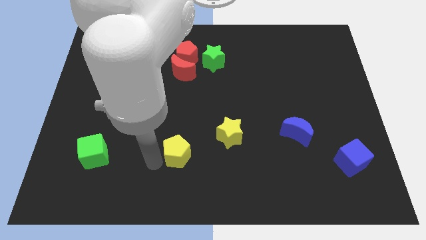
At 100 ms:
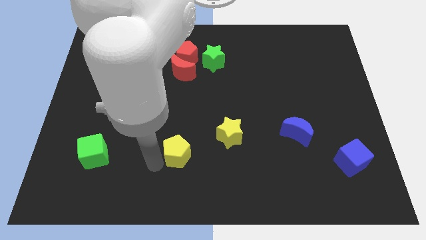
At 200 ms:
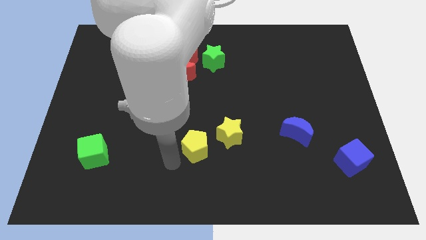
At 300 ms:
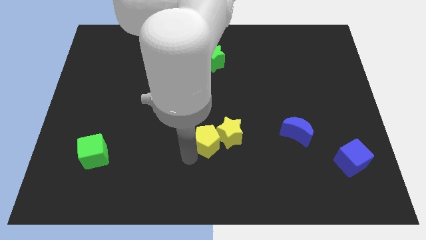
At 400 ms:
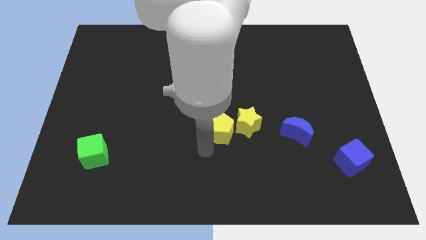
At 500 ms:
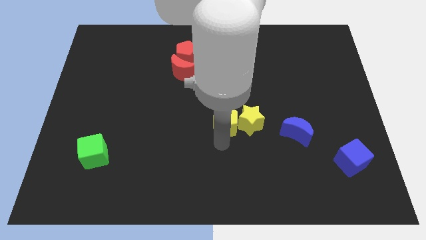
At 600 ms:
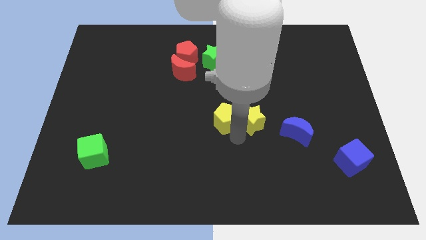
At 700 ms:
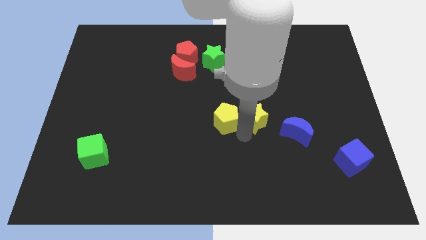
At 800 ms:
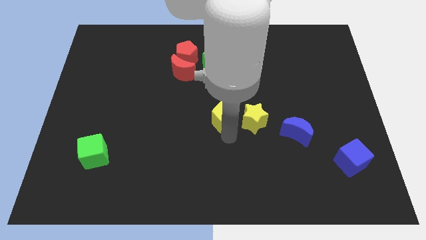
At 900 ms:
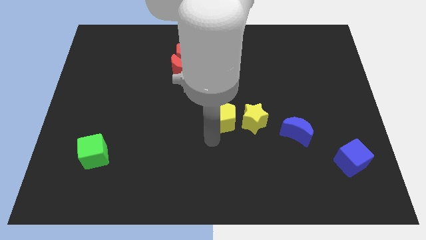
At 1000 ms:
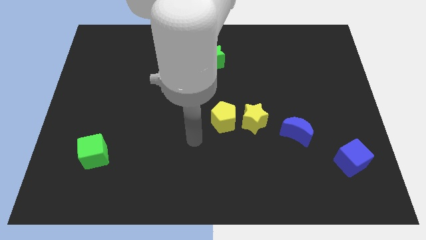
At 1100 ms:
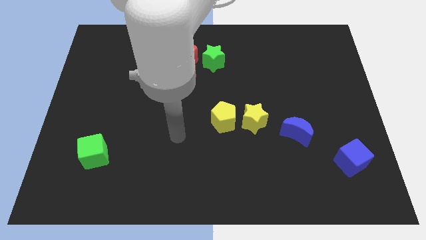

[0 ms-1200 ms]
put the yellow pentagon parallel left to the yellow star

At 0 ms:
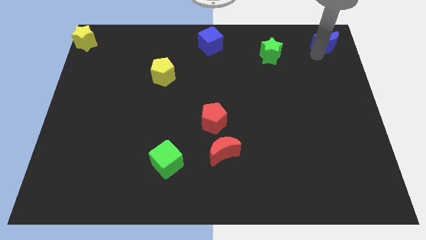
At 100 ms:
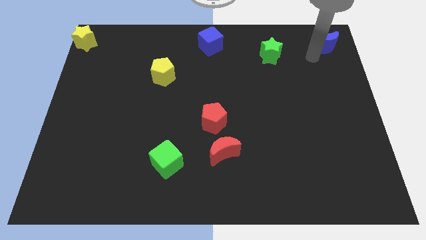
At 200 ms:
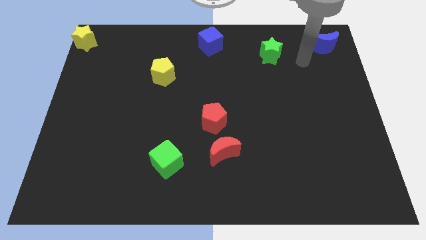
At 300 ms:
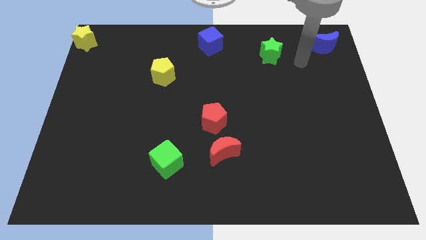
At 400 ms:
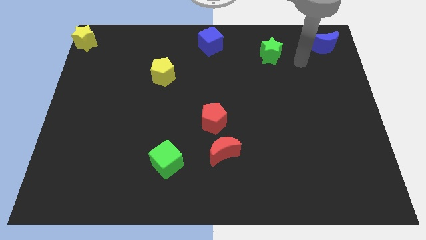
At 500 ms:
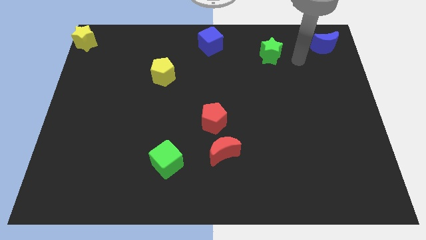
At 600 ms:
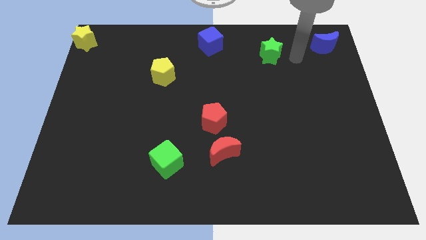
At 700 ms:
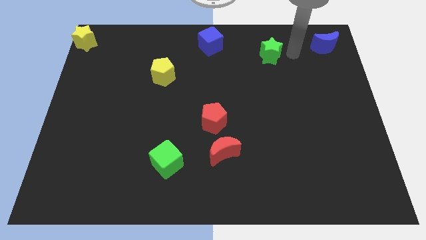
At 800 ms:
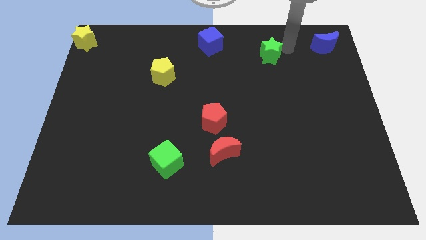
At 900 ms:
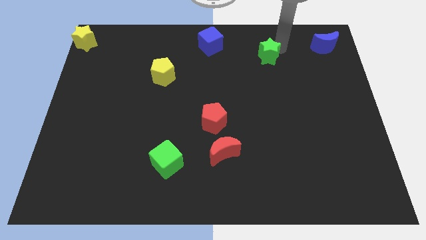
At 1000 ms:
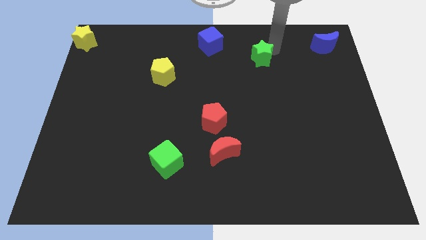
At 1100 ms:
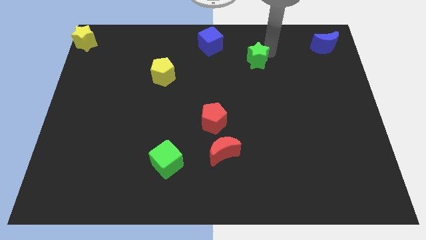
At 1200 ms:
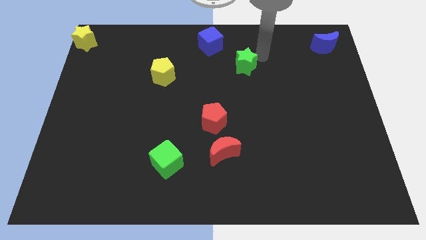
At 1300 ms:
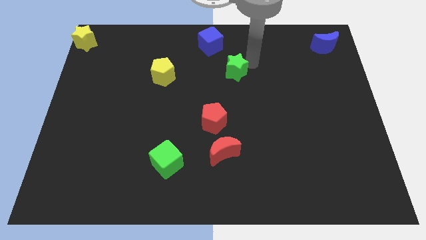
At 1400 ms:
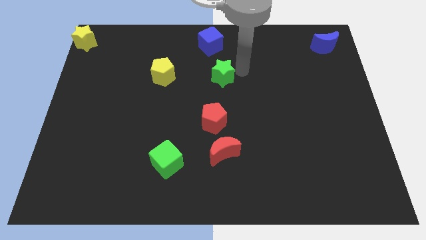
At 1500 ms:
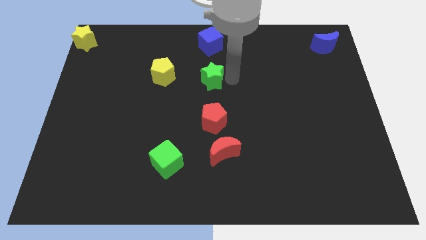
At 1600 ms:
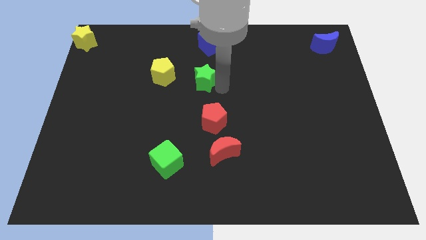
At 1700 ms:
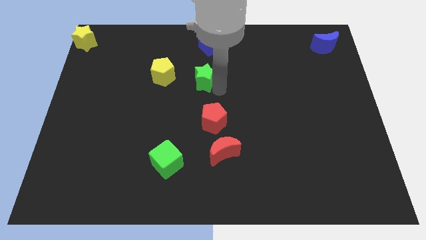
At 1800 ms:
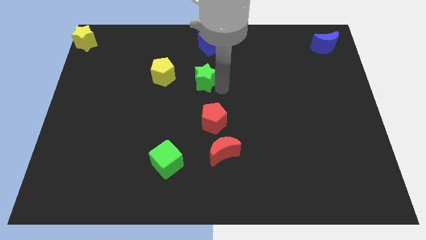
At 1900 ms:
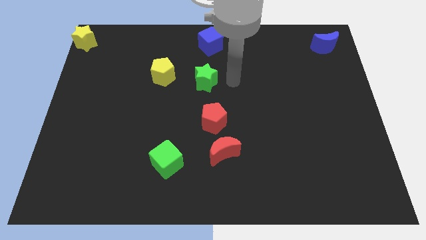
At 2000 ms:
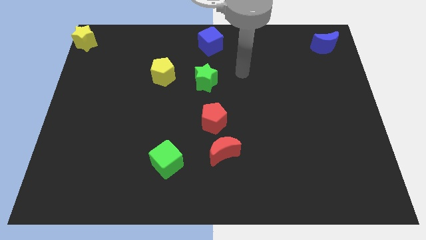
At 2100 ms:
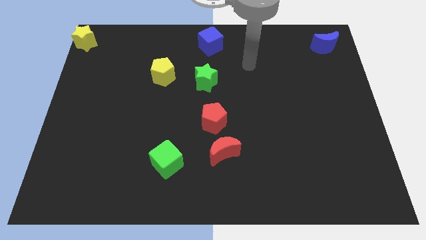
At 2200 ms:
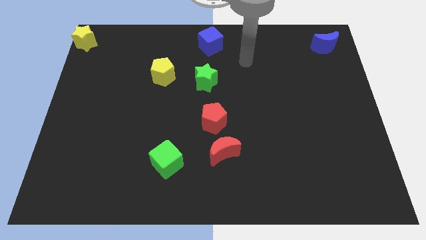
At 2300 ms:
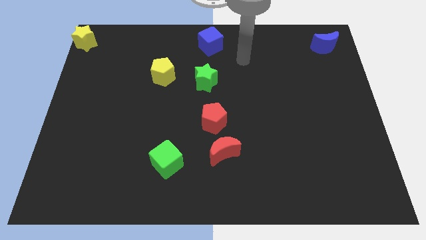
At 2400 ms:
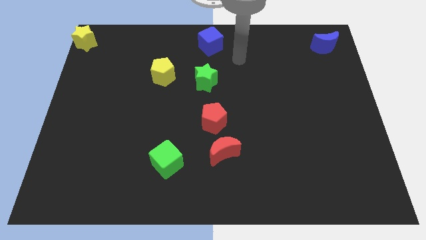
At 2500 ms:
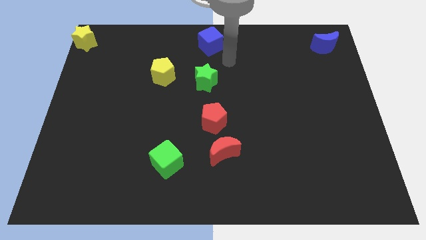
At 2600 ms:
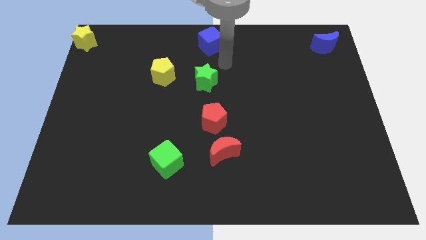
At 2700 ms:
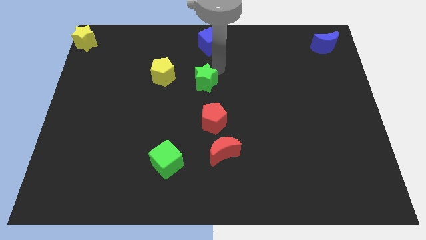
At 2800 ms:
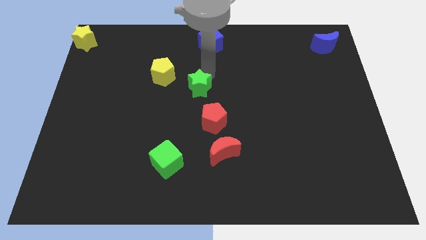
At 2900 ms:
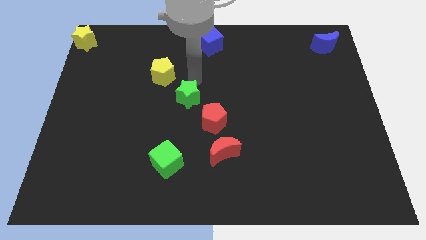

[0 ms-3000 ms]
place the green star diagonally in between the red pentagon and yellow pentagon

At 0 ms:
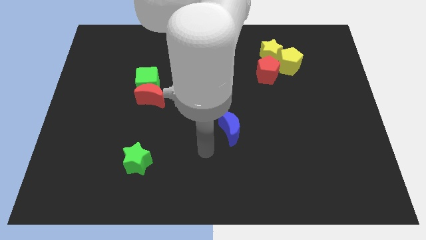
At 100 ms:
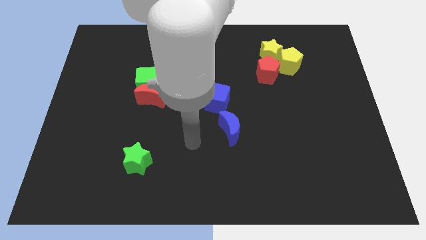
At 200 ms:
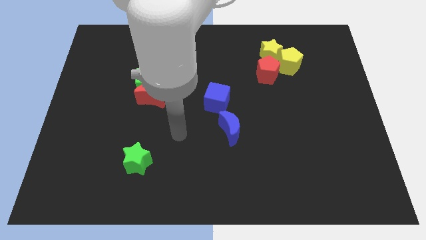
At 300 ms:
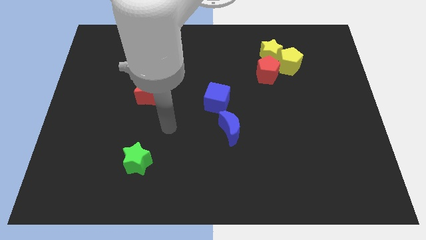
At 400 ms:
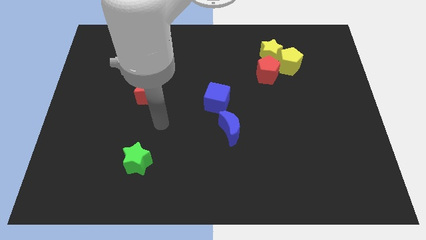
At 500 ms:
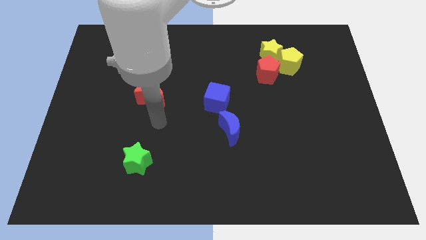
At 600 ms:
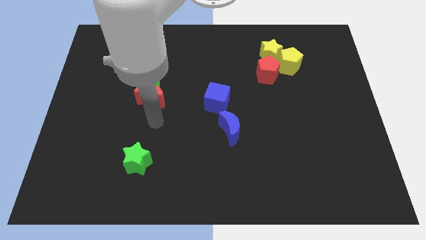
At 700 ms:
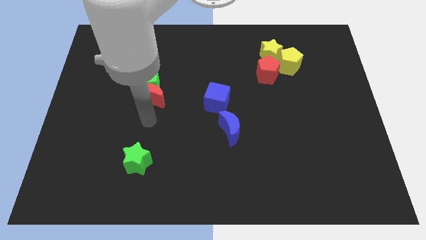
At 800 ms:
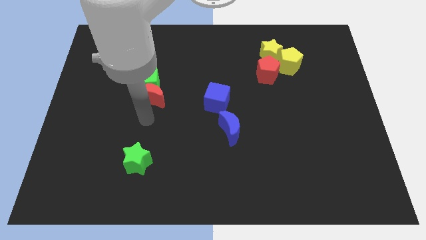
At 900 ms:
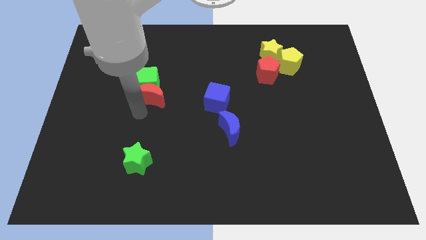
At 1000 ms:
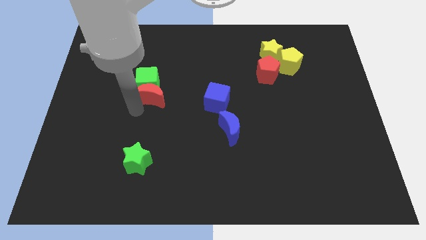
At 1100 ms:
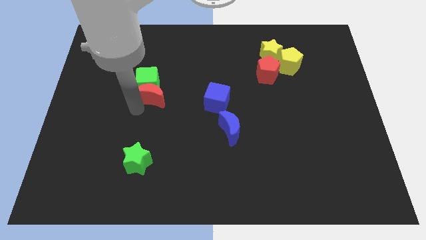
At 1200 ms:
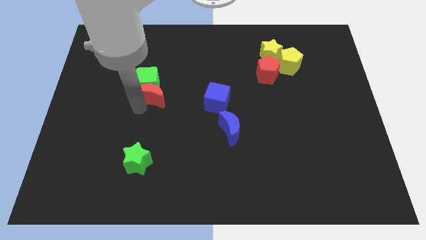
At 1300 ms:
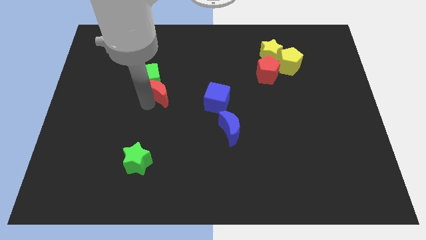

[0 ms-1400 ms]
move your arm to the red crescent

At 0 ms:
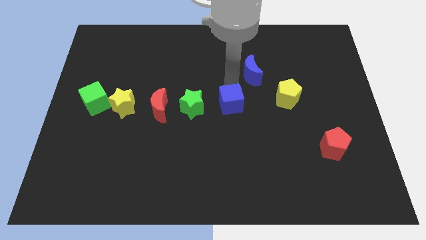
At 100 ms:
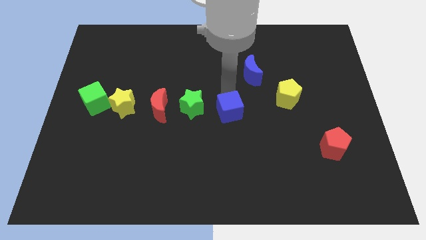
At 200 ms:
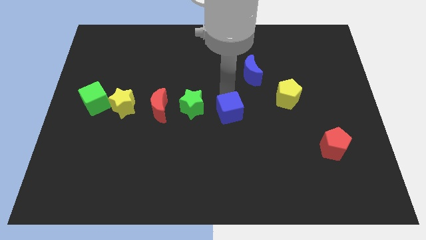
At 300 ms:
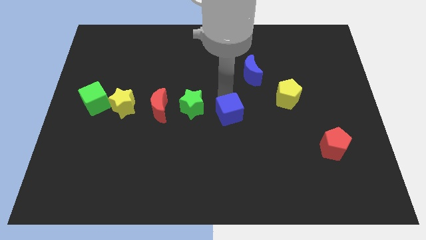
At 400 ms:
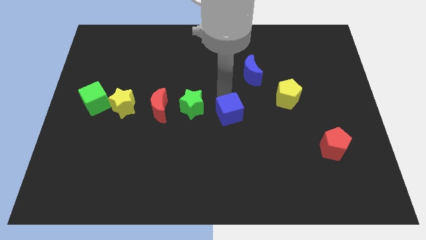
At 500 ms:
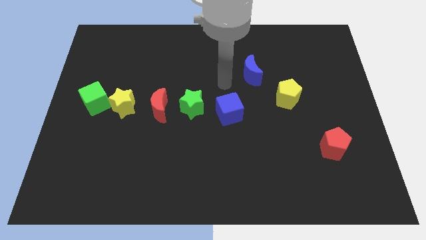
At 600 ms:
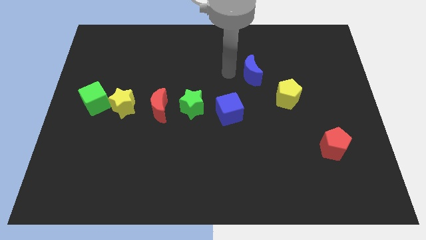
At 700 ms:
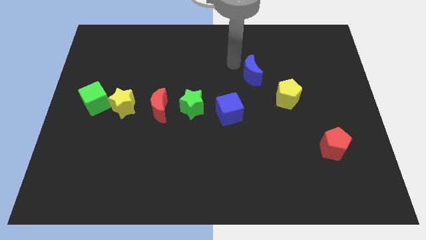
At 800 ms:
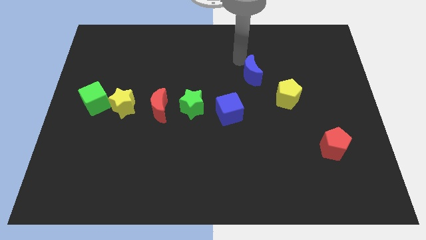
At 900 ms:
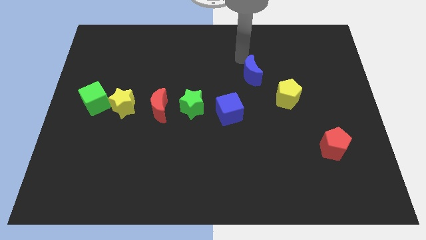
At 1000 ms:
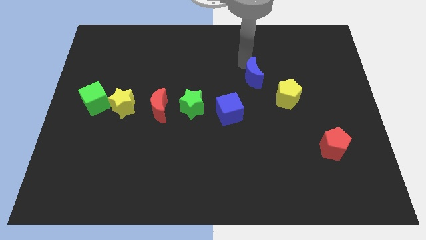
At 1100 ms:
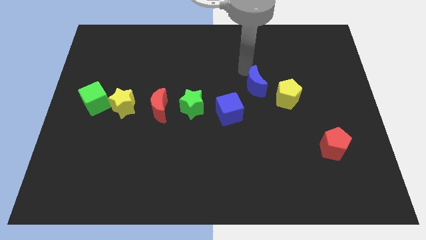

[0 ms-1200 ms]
place the arm above the blue moon

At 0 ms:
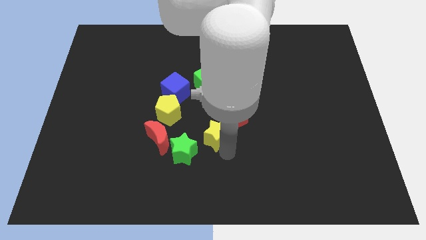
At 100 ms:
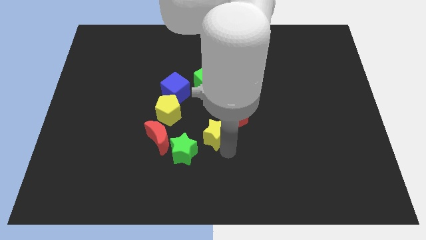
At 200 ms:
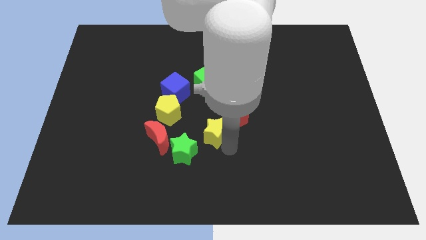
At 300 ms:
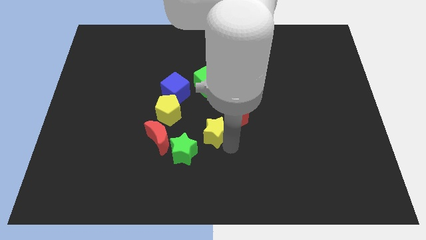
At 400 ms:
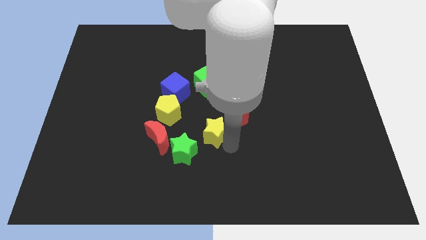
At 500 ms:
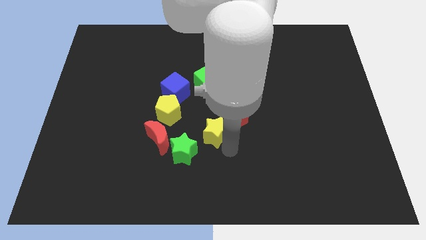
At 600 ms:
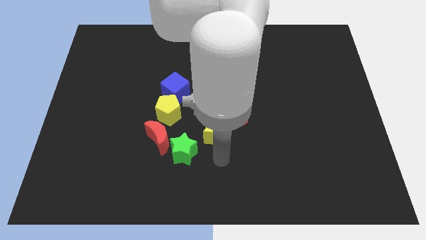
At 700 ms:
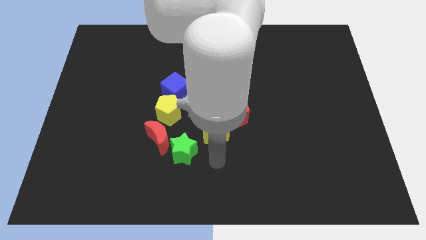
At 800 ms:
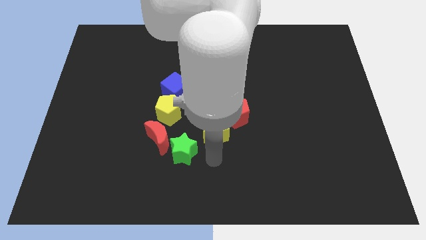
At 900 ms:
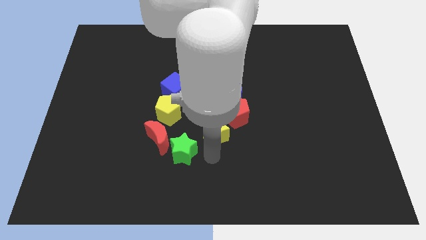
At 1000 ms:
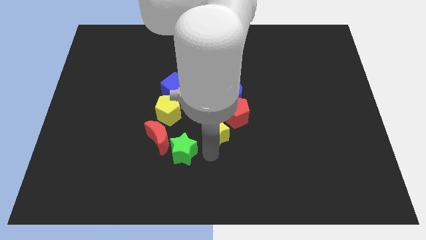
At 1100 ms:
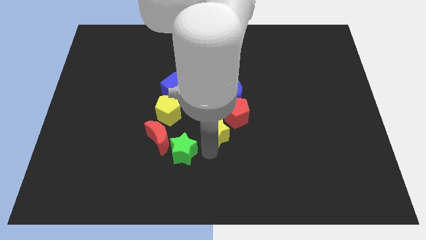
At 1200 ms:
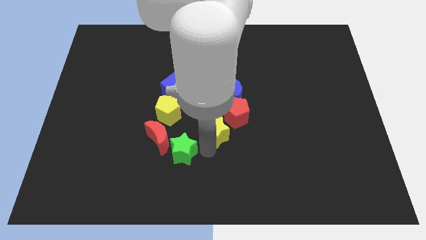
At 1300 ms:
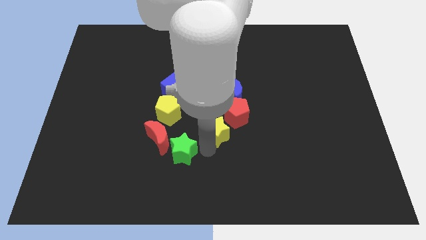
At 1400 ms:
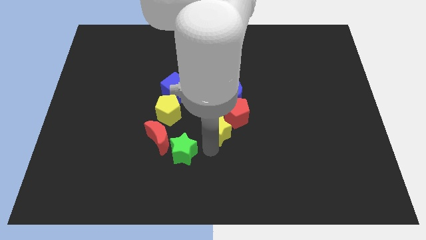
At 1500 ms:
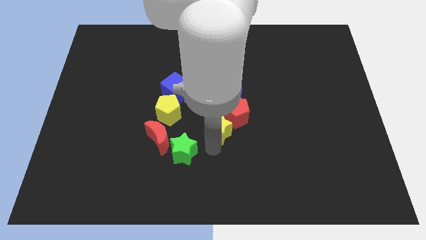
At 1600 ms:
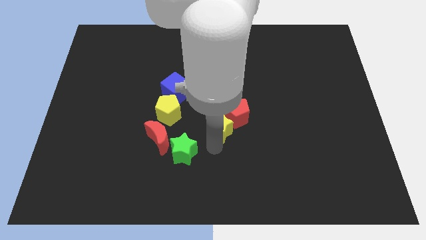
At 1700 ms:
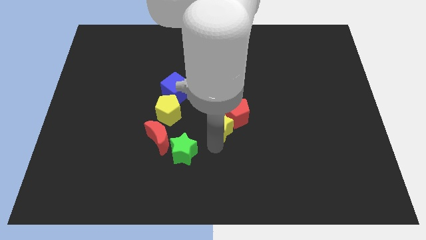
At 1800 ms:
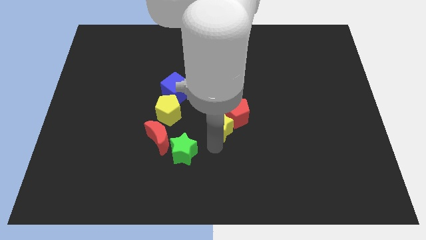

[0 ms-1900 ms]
move the yellow star into the bottom left side of the red pentagon

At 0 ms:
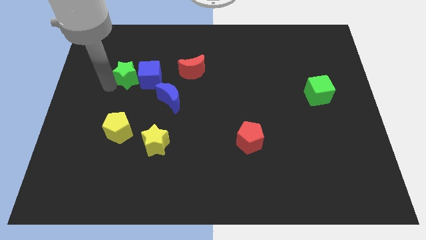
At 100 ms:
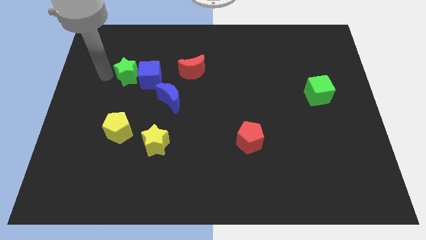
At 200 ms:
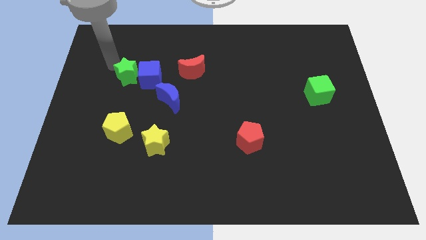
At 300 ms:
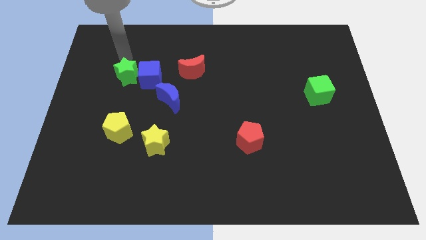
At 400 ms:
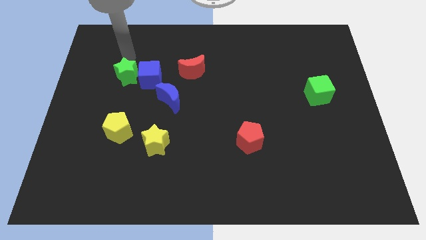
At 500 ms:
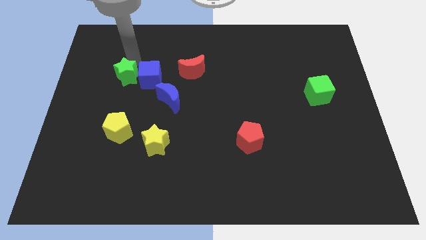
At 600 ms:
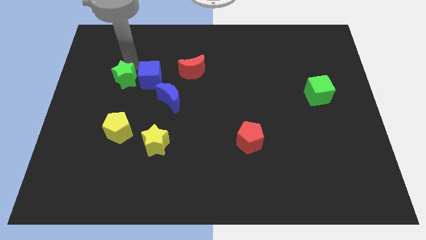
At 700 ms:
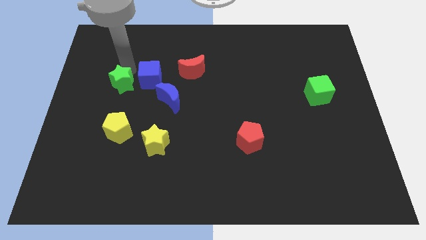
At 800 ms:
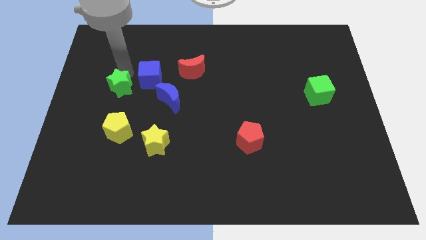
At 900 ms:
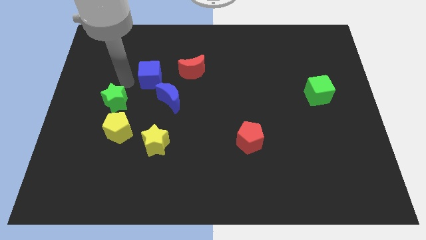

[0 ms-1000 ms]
place green star to the top of yellow pentagon
